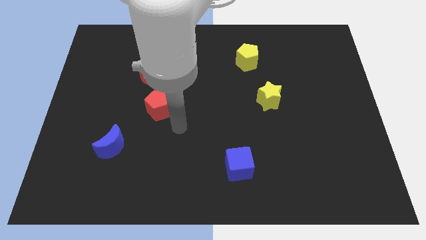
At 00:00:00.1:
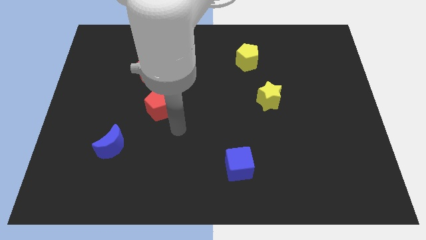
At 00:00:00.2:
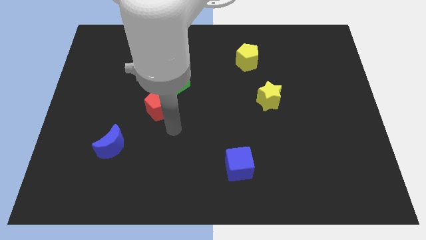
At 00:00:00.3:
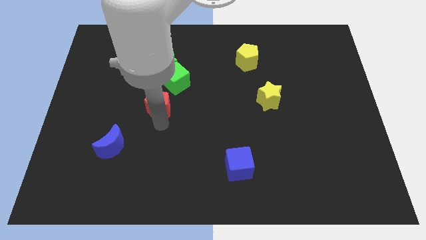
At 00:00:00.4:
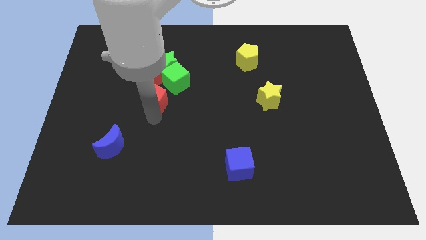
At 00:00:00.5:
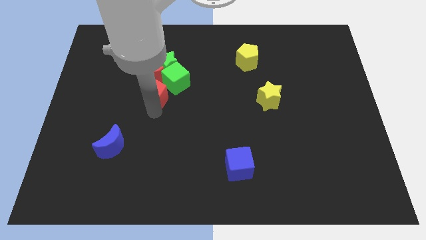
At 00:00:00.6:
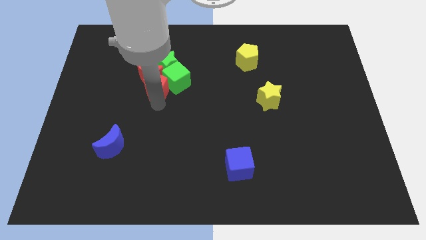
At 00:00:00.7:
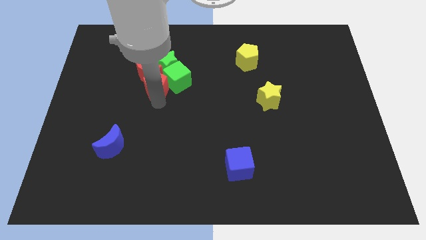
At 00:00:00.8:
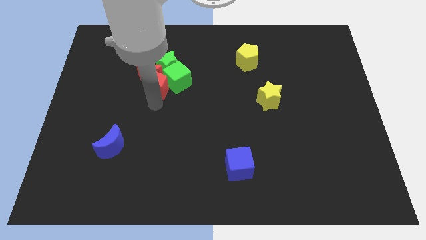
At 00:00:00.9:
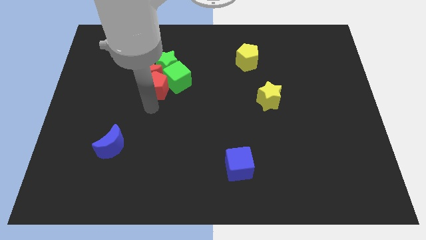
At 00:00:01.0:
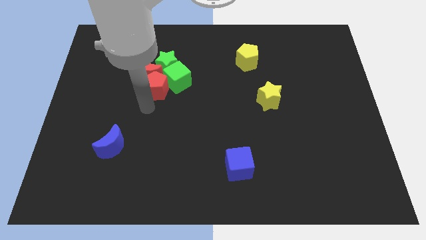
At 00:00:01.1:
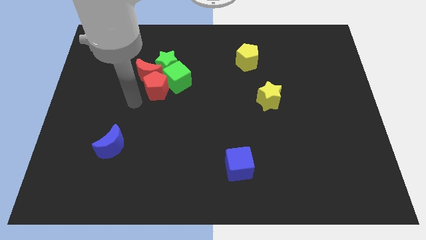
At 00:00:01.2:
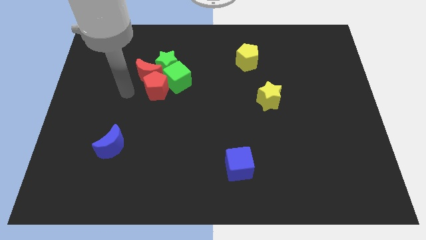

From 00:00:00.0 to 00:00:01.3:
push the red pentagon into the red moon

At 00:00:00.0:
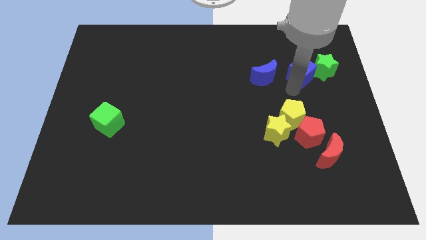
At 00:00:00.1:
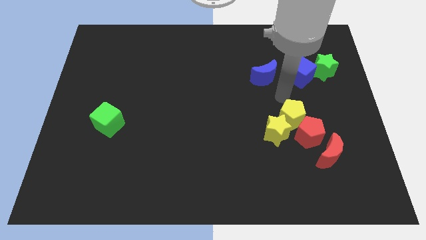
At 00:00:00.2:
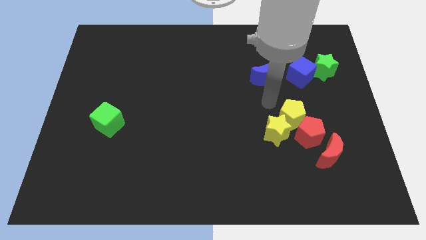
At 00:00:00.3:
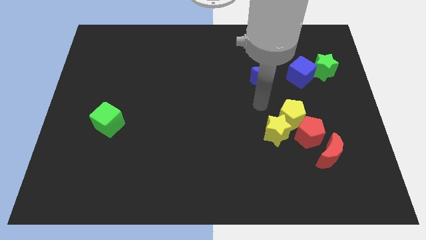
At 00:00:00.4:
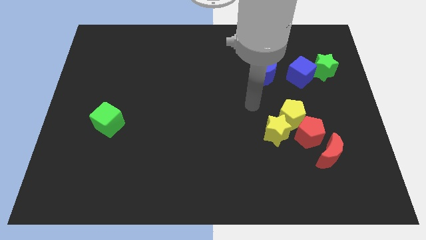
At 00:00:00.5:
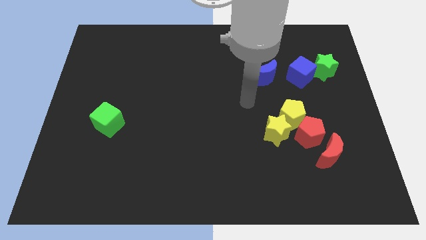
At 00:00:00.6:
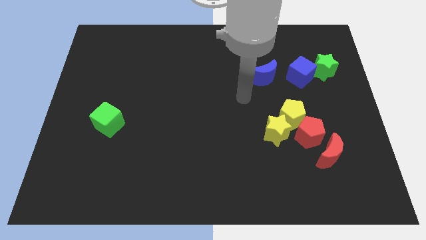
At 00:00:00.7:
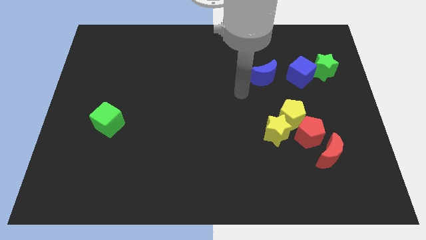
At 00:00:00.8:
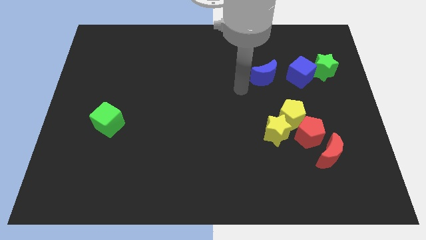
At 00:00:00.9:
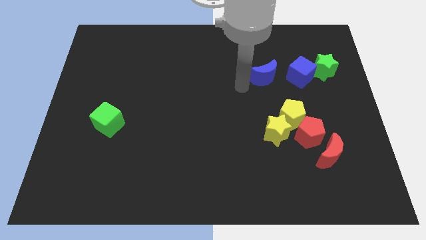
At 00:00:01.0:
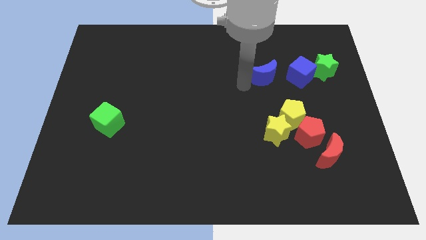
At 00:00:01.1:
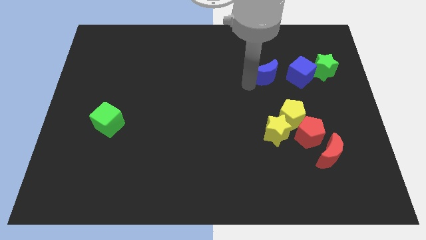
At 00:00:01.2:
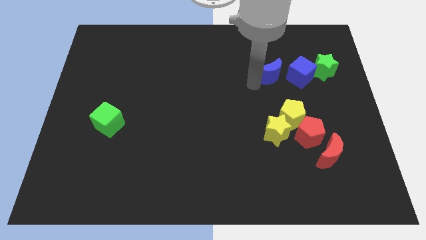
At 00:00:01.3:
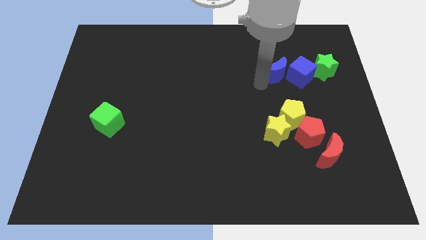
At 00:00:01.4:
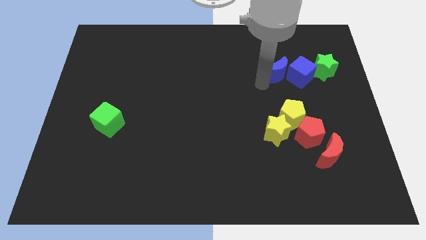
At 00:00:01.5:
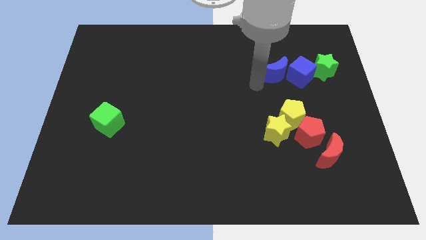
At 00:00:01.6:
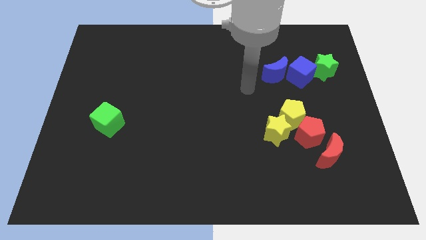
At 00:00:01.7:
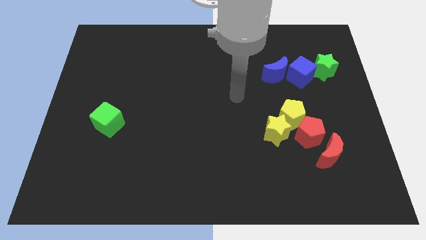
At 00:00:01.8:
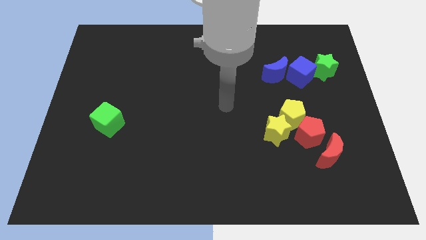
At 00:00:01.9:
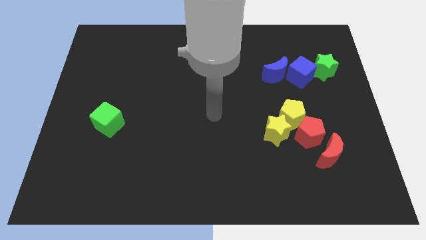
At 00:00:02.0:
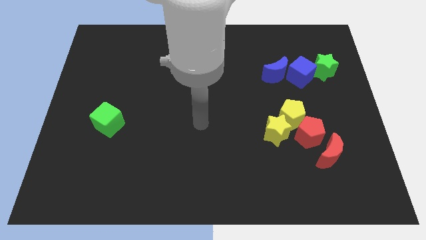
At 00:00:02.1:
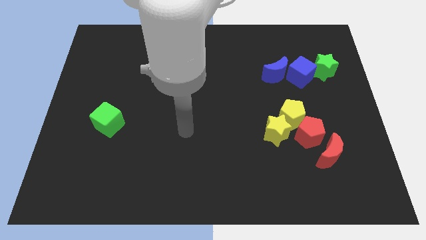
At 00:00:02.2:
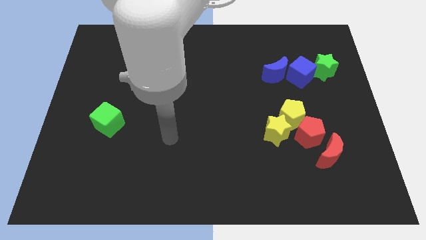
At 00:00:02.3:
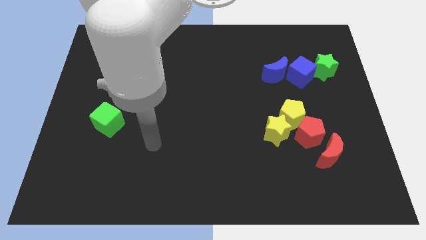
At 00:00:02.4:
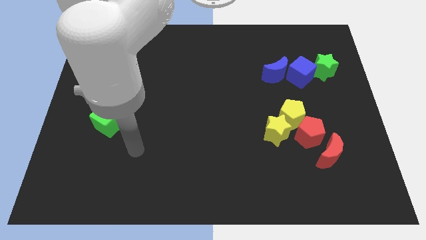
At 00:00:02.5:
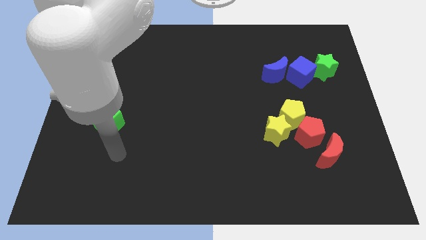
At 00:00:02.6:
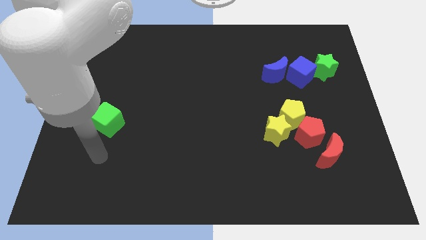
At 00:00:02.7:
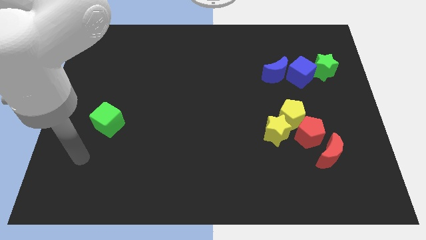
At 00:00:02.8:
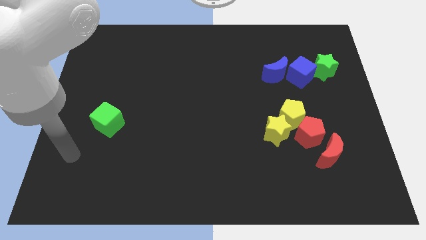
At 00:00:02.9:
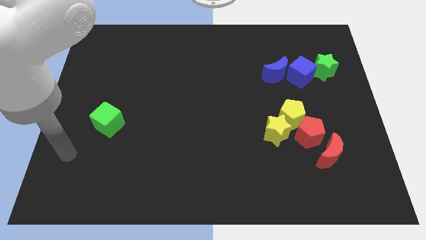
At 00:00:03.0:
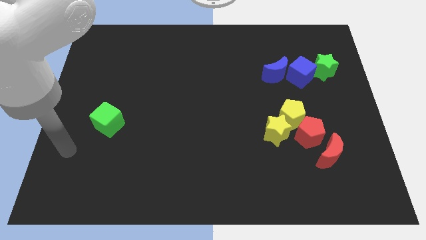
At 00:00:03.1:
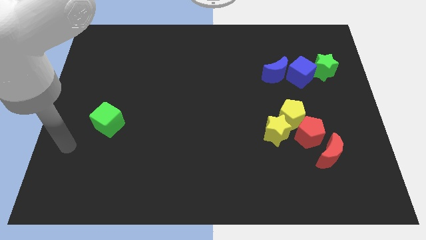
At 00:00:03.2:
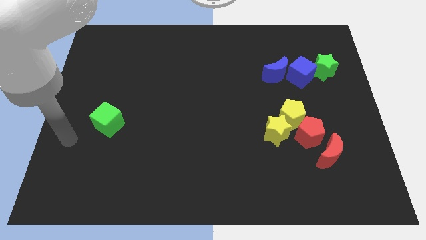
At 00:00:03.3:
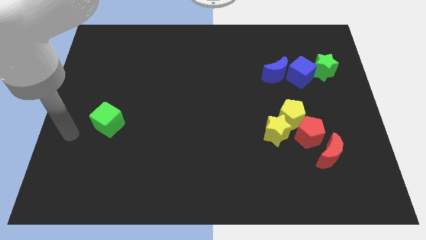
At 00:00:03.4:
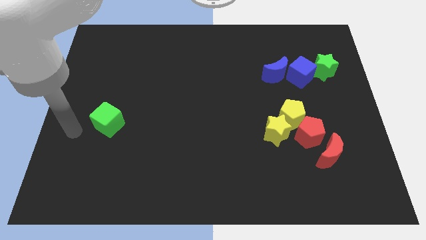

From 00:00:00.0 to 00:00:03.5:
drag your hand away from the blue cube

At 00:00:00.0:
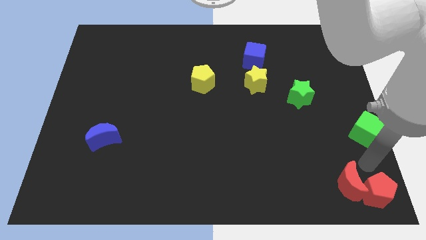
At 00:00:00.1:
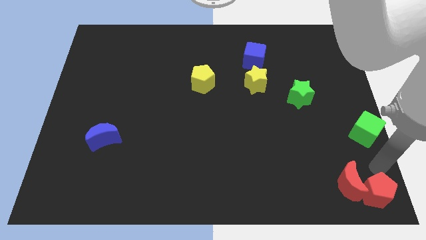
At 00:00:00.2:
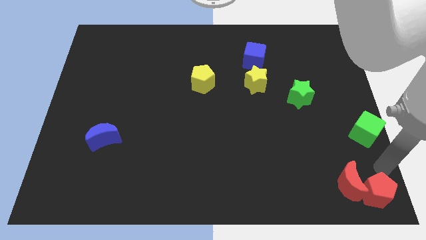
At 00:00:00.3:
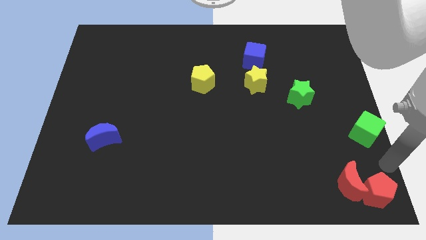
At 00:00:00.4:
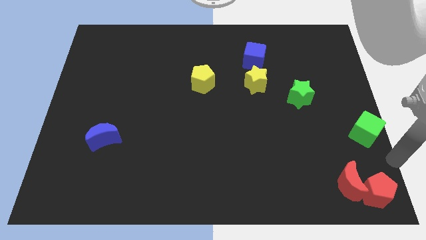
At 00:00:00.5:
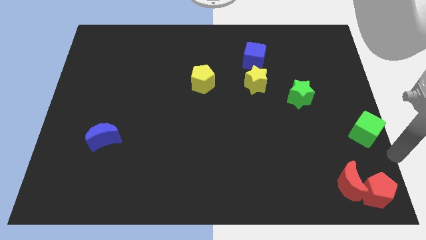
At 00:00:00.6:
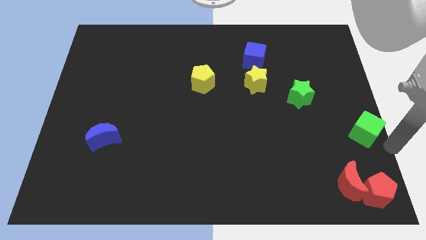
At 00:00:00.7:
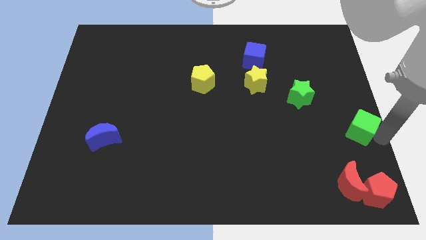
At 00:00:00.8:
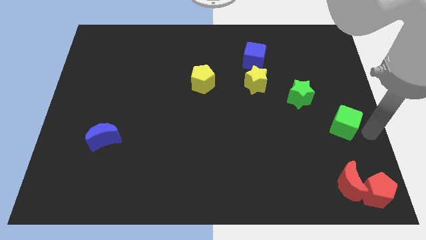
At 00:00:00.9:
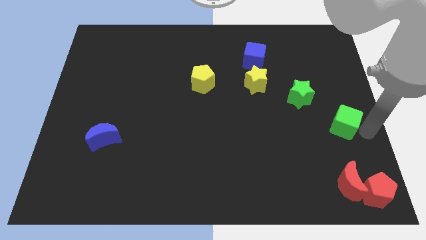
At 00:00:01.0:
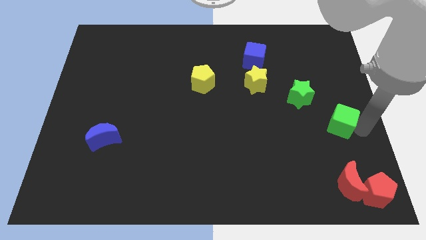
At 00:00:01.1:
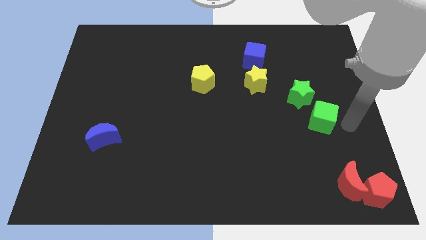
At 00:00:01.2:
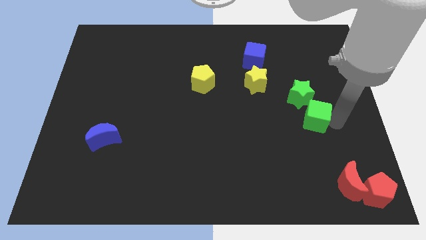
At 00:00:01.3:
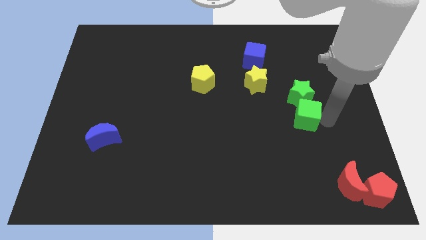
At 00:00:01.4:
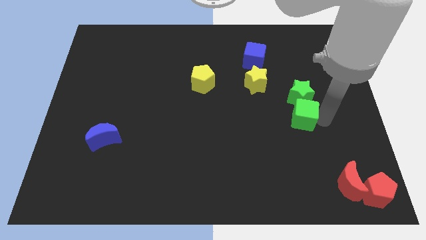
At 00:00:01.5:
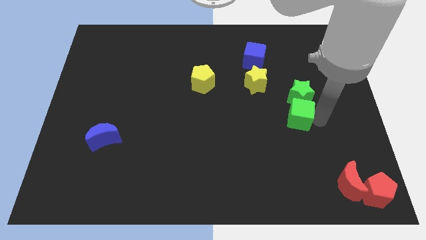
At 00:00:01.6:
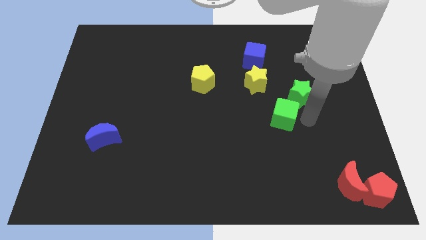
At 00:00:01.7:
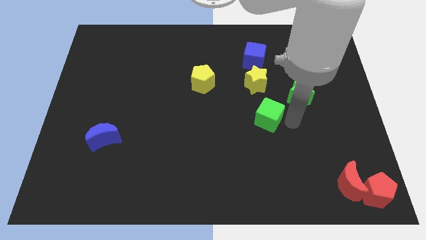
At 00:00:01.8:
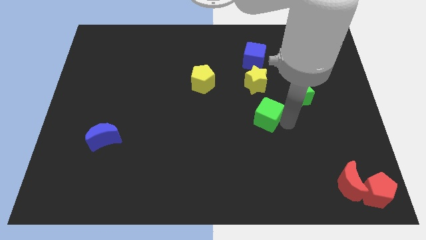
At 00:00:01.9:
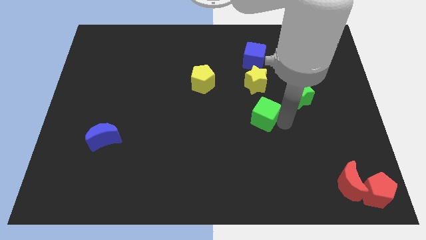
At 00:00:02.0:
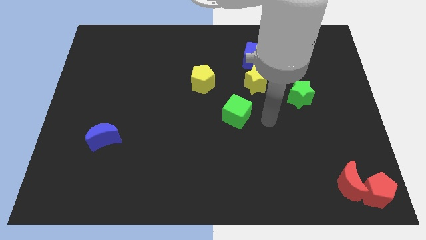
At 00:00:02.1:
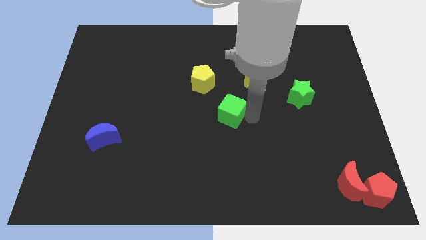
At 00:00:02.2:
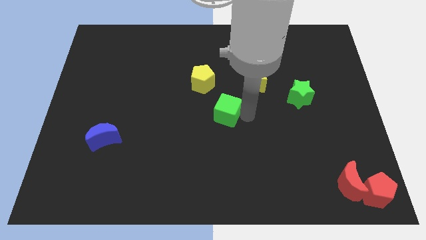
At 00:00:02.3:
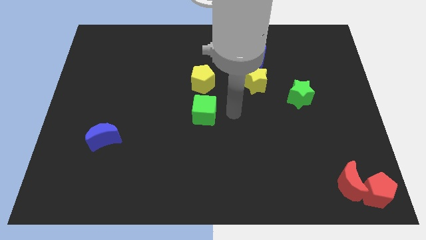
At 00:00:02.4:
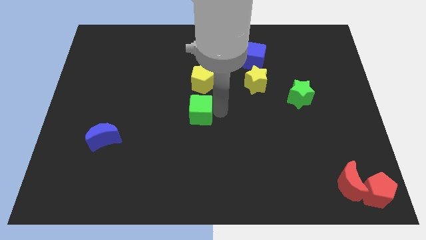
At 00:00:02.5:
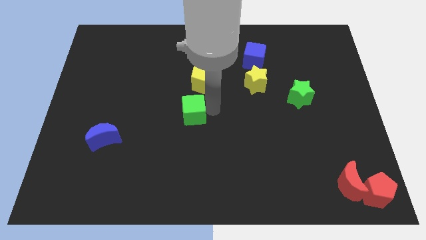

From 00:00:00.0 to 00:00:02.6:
move the green cube vertical to the yellow pentagon

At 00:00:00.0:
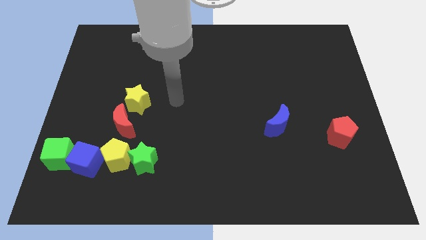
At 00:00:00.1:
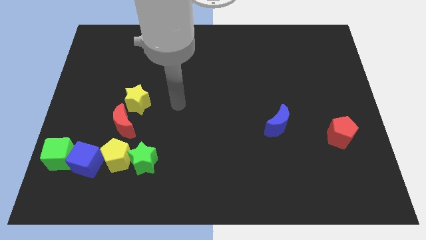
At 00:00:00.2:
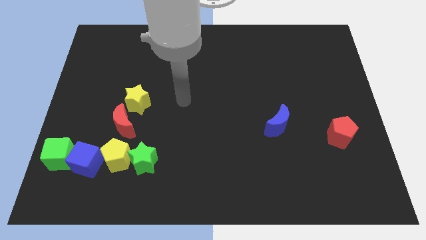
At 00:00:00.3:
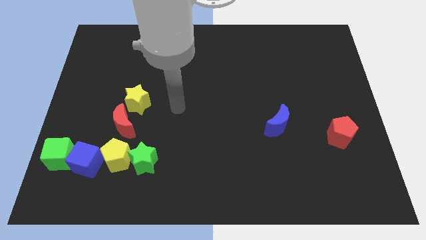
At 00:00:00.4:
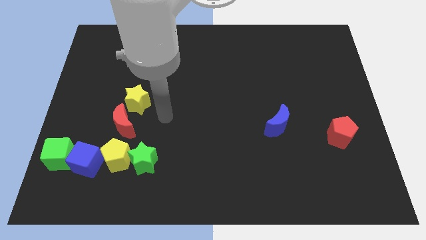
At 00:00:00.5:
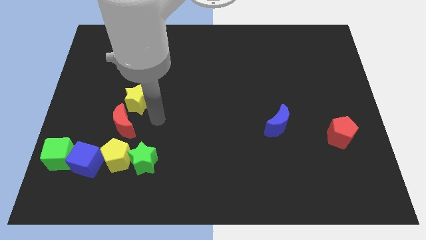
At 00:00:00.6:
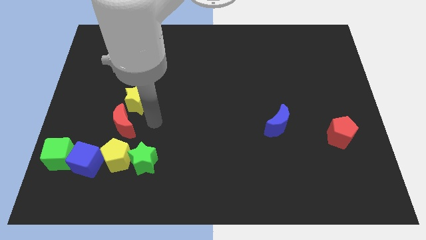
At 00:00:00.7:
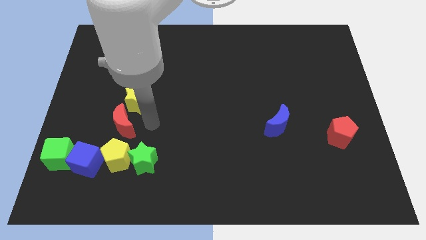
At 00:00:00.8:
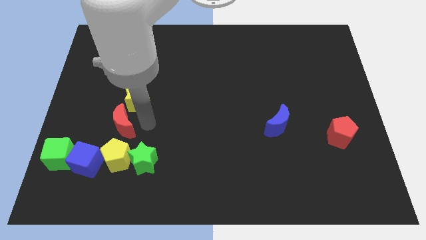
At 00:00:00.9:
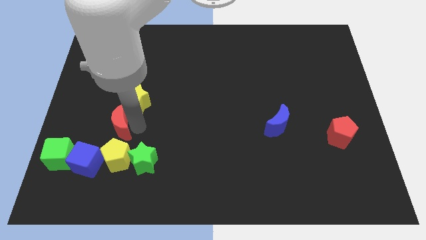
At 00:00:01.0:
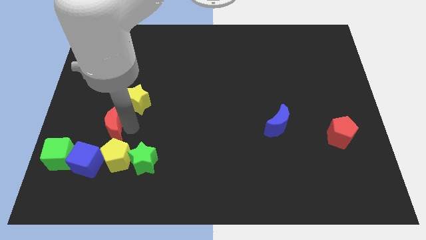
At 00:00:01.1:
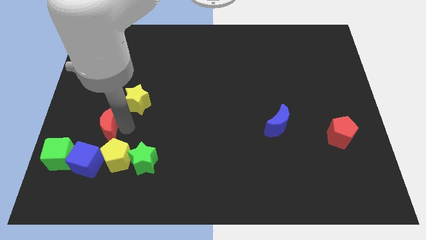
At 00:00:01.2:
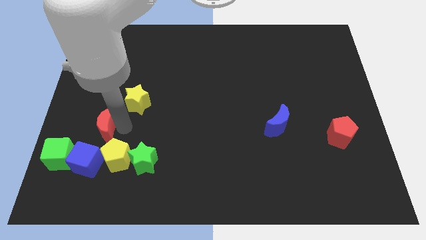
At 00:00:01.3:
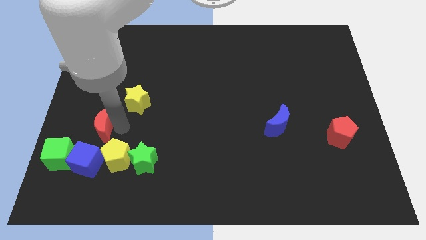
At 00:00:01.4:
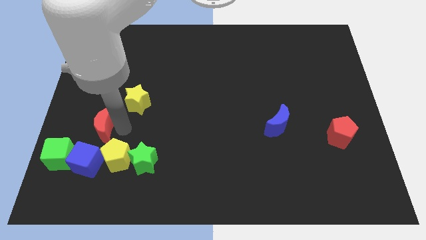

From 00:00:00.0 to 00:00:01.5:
push red moon slightly to the left side of the board
